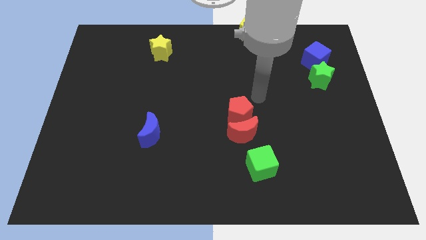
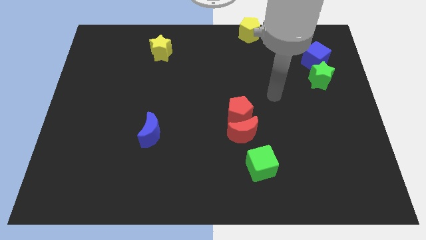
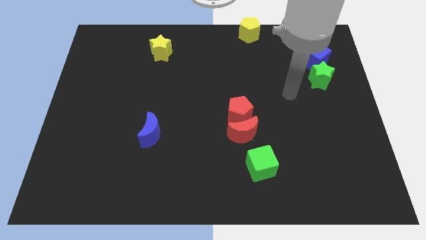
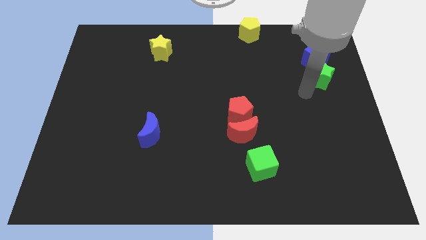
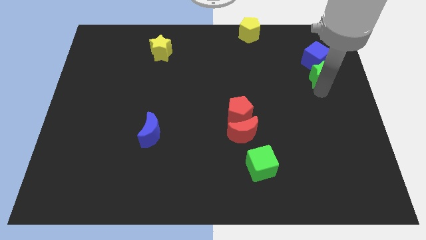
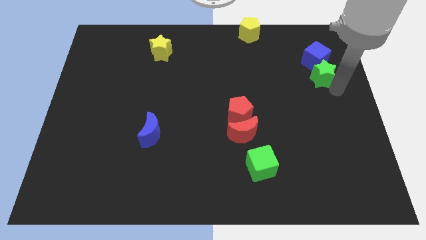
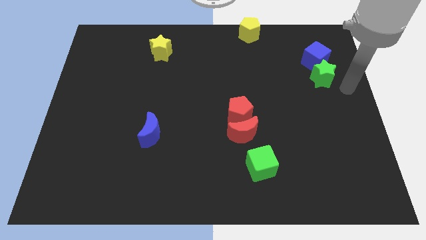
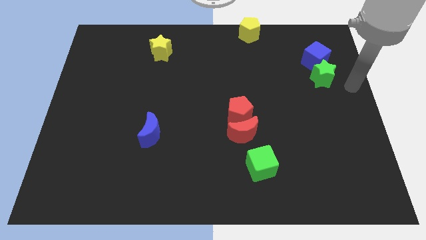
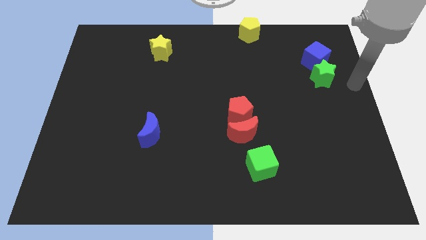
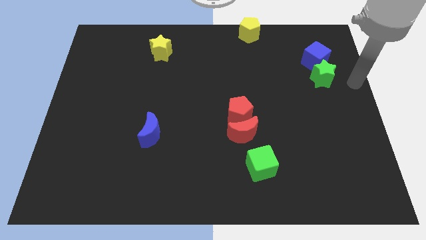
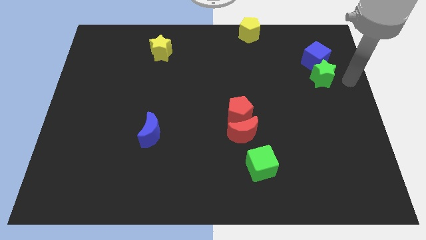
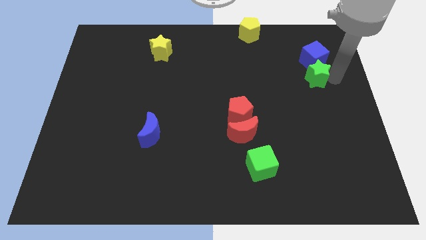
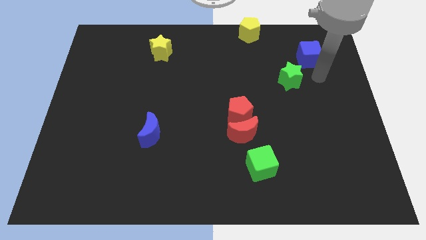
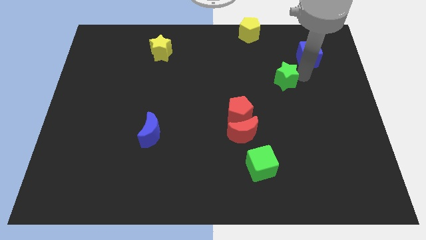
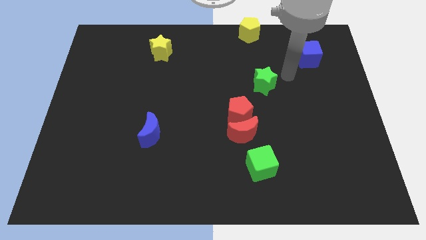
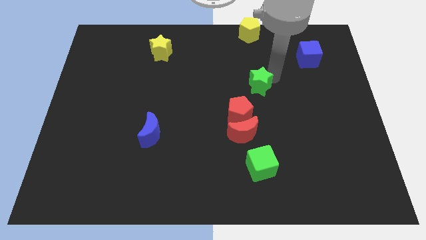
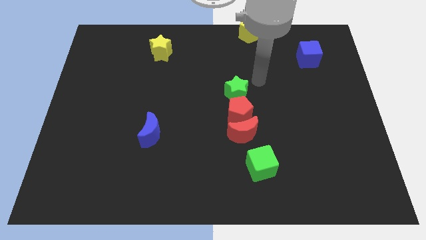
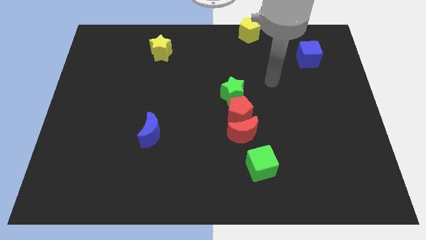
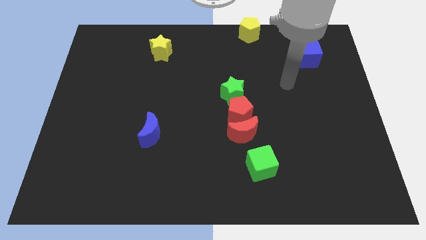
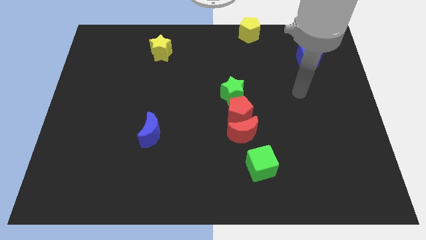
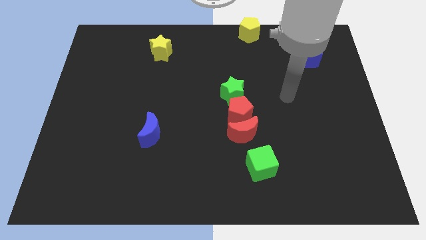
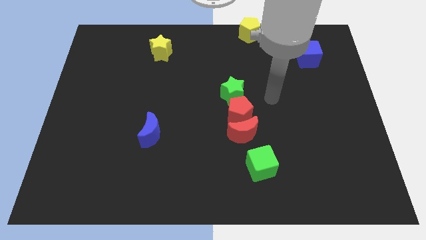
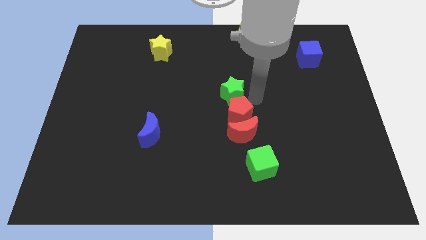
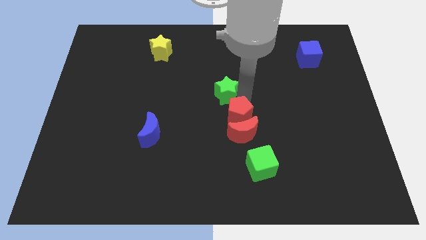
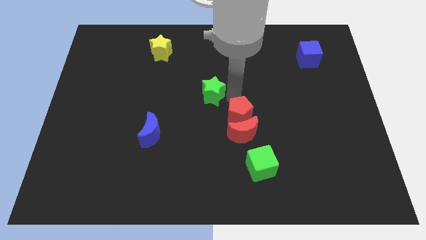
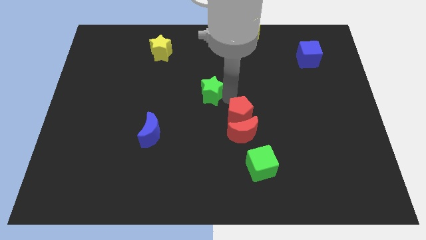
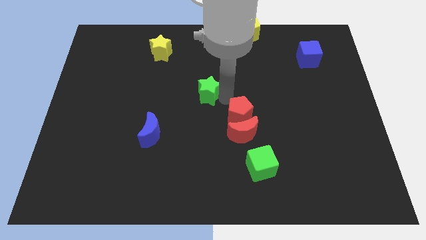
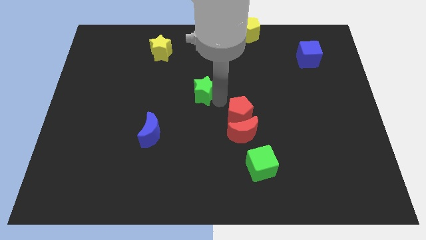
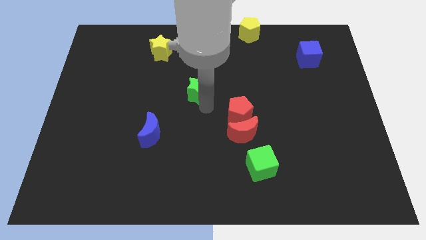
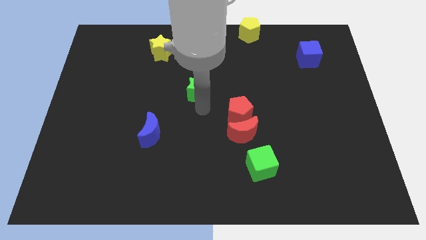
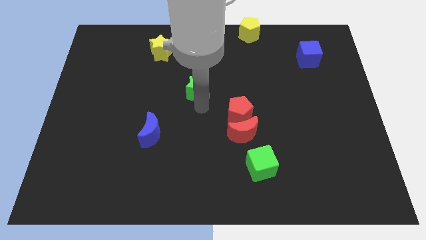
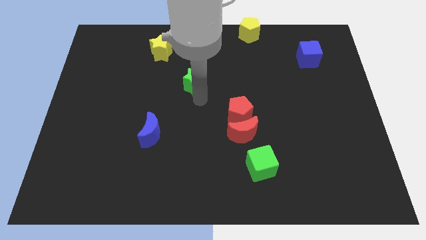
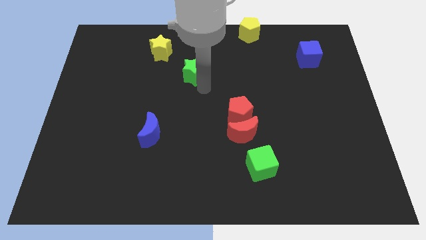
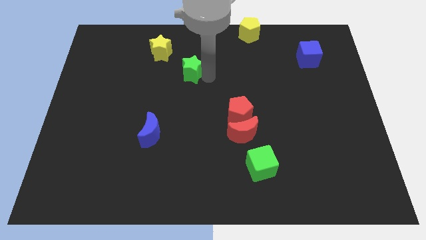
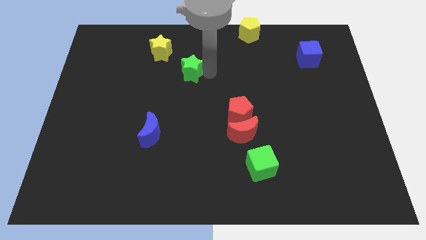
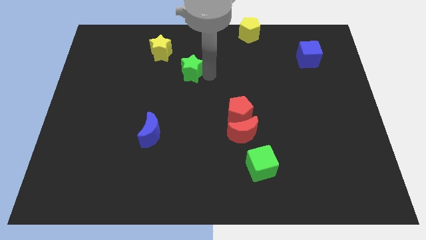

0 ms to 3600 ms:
separate the green star from the blue cube

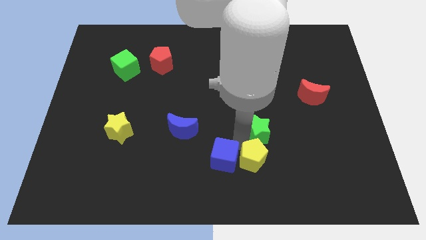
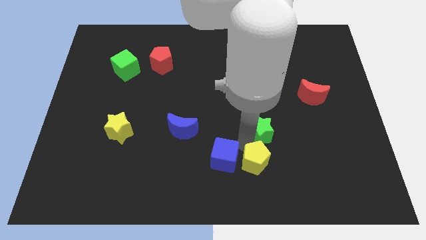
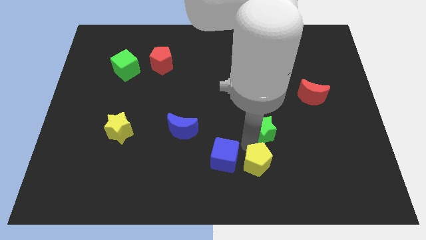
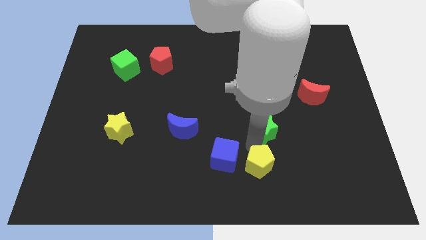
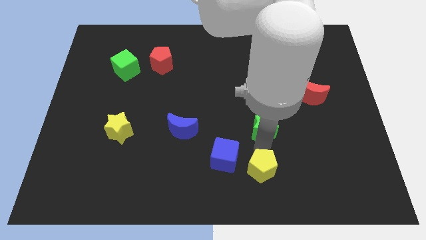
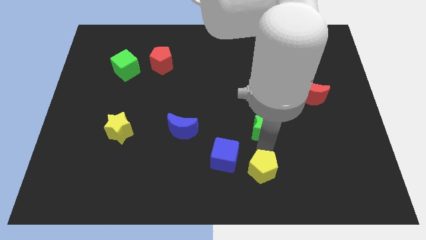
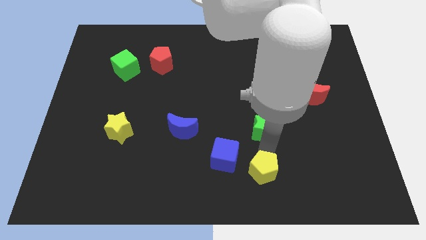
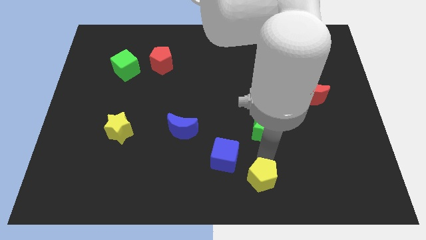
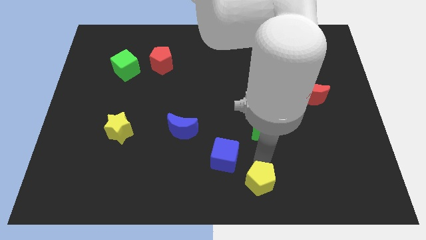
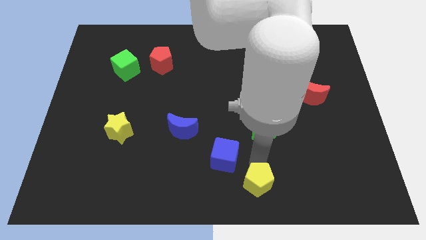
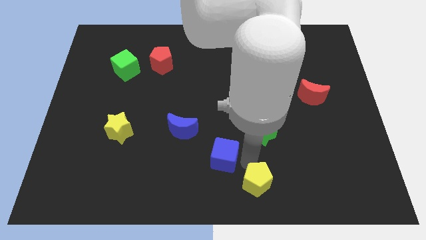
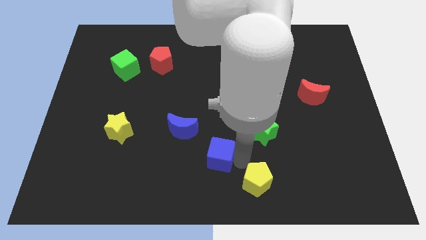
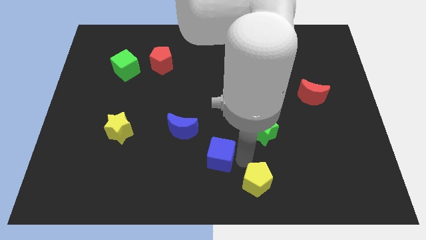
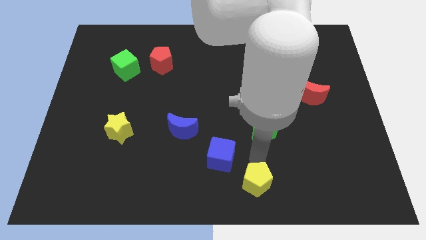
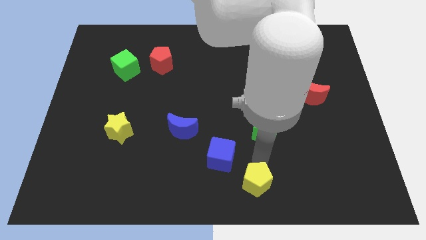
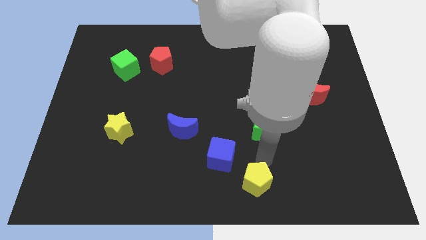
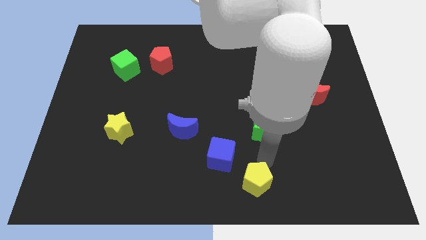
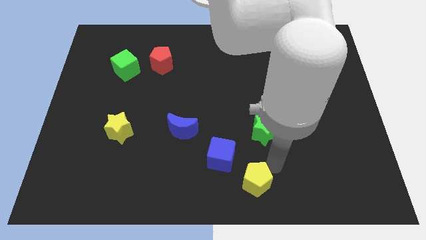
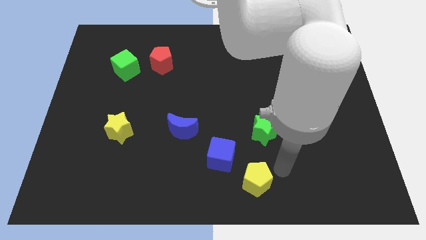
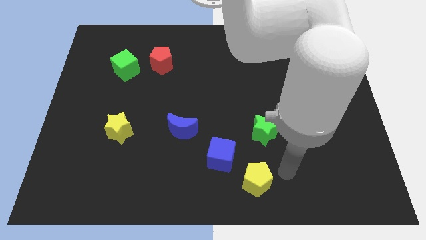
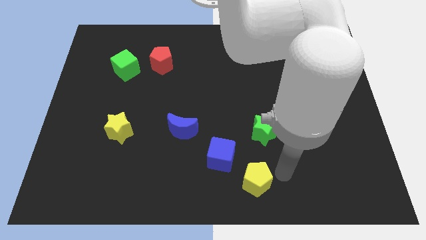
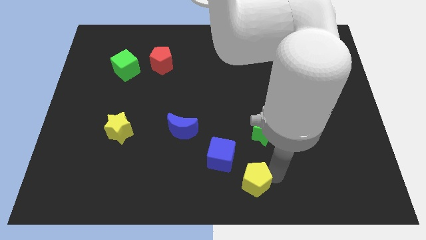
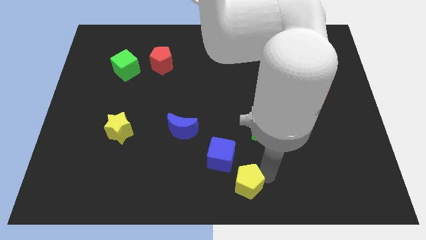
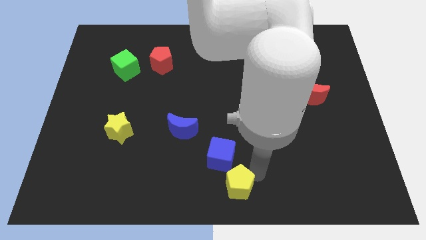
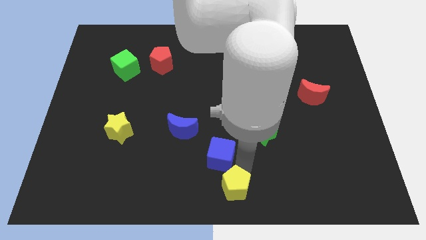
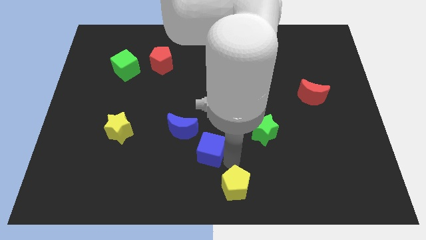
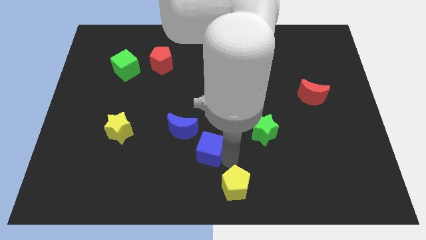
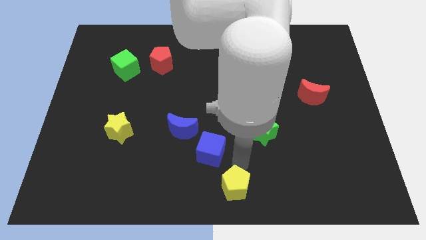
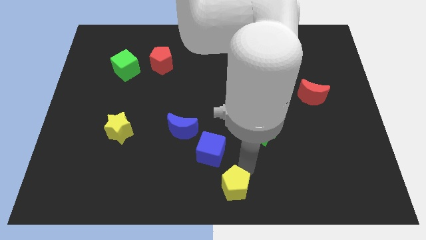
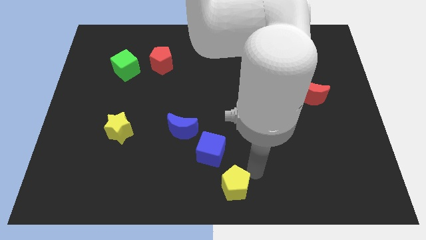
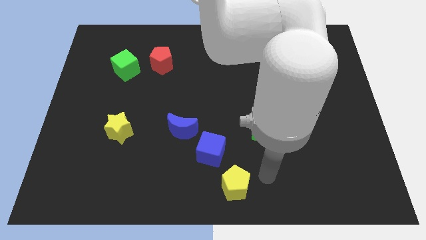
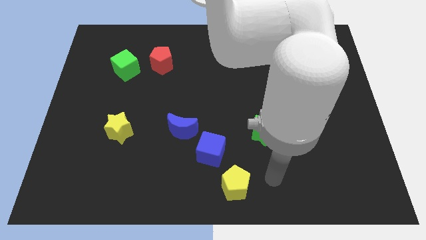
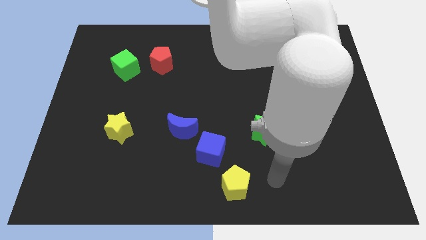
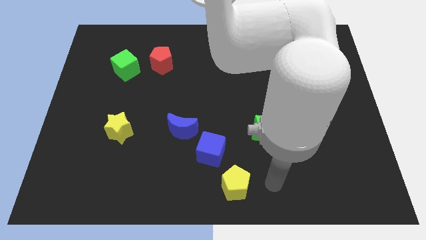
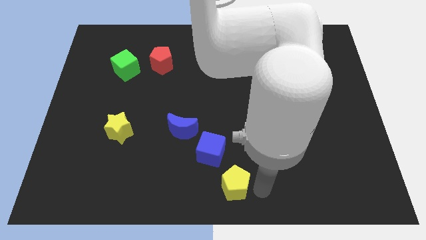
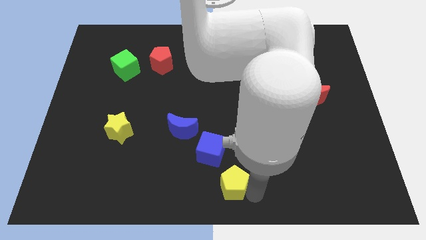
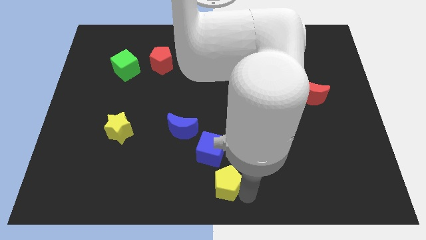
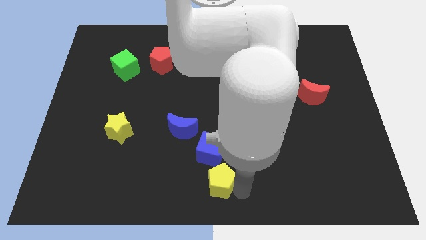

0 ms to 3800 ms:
move the yellow pentagon to the bottom center

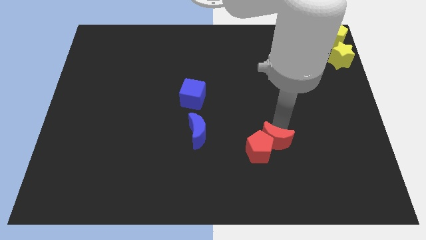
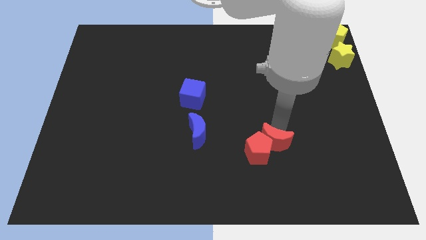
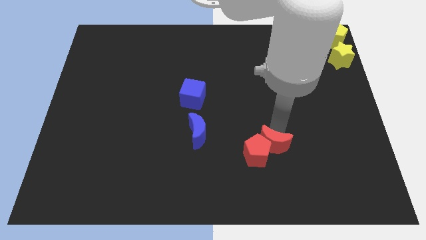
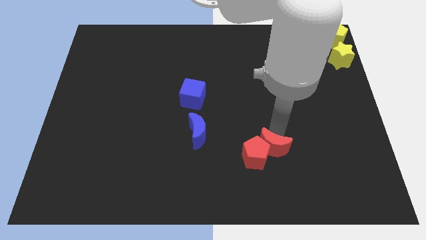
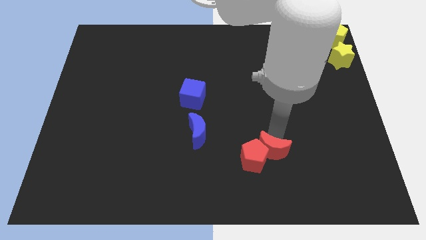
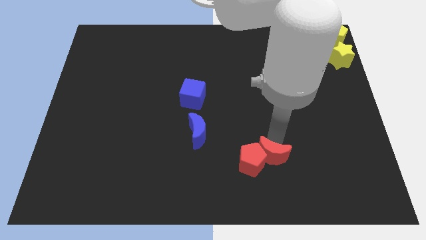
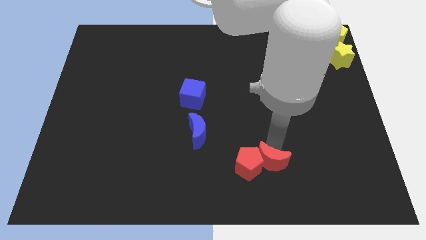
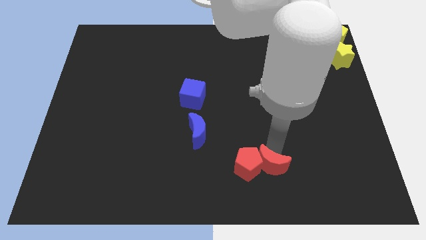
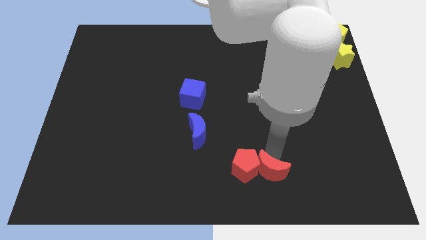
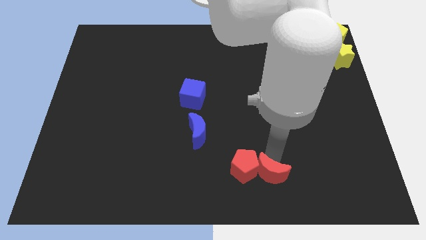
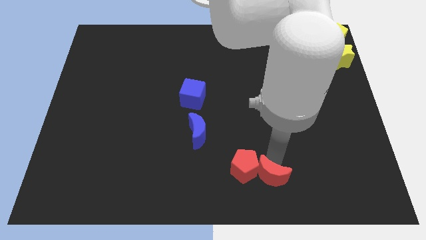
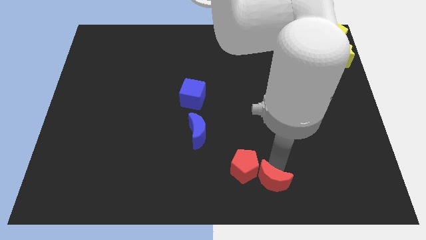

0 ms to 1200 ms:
push the red crescent to the right of the red pentagon

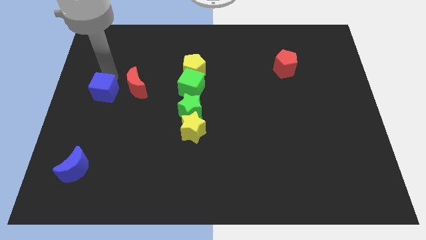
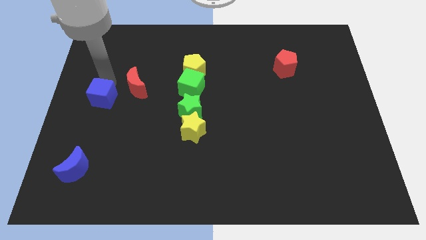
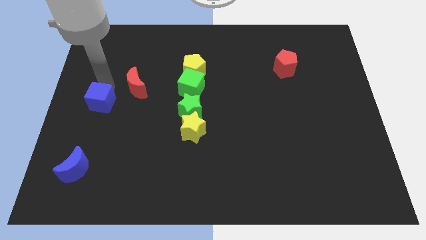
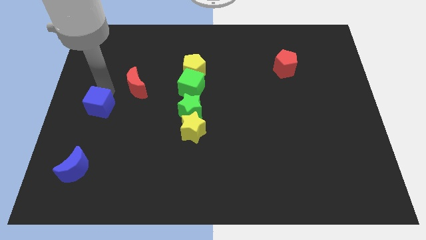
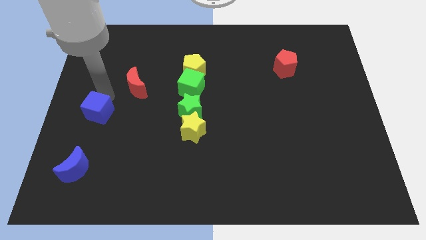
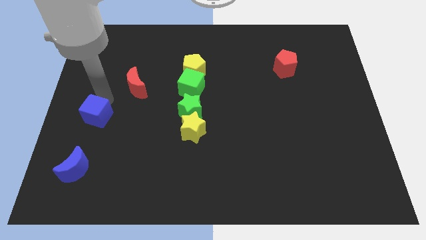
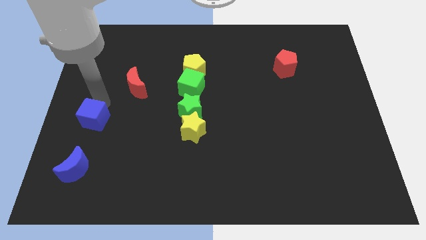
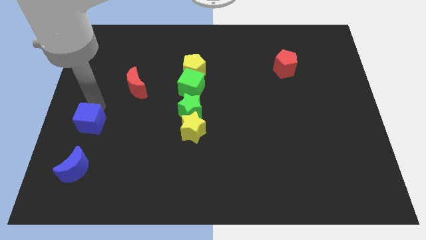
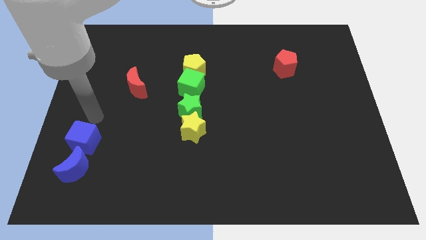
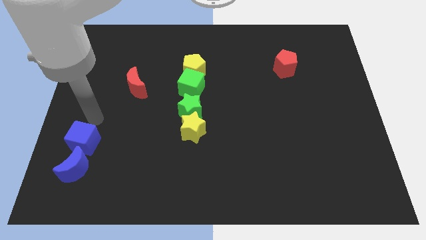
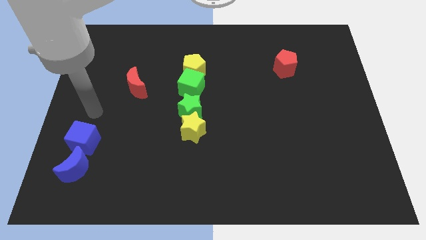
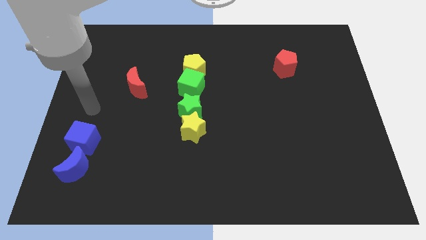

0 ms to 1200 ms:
move the blue cube into the blue moon
